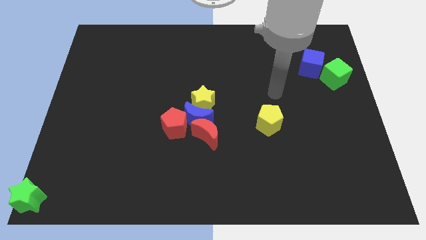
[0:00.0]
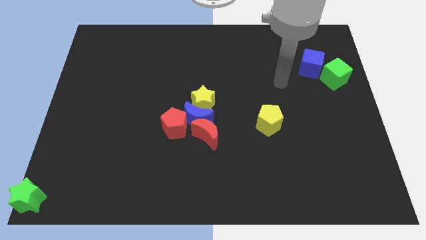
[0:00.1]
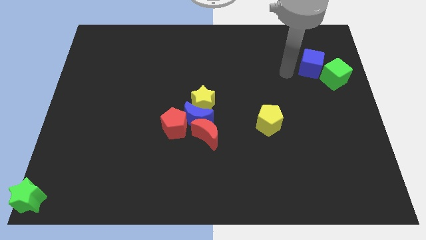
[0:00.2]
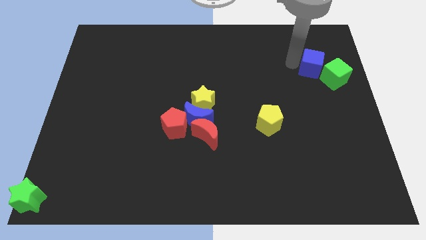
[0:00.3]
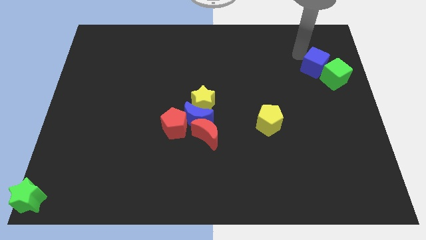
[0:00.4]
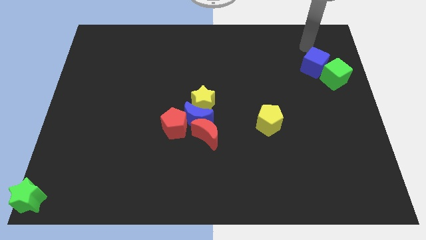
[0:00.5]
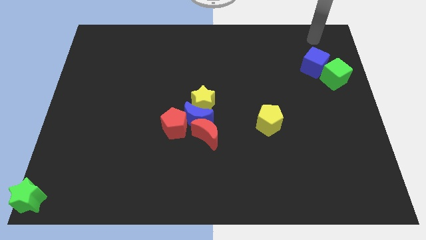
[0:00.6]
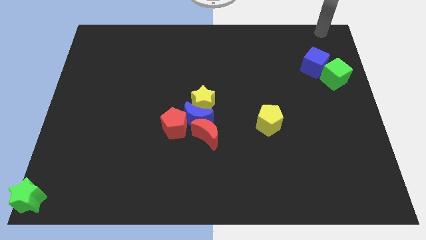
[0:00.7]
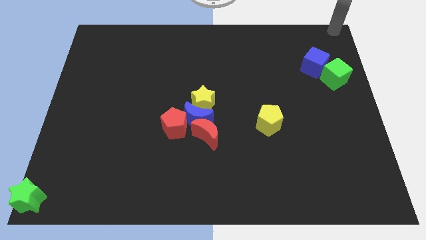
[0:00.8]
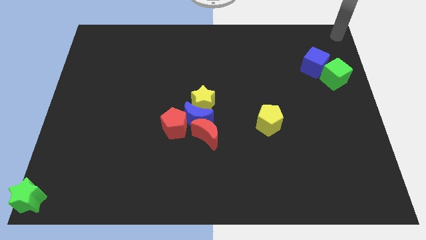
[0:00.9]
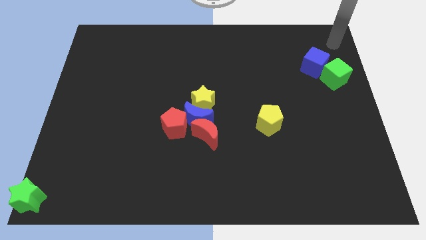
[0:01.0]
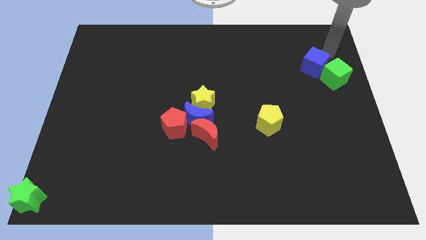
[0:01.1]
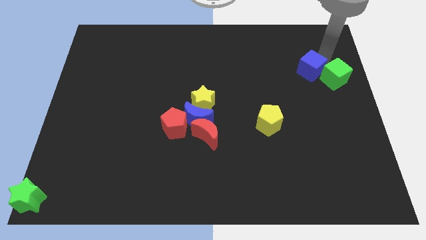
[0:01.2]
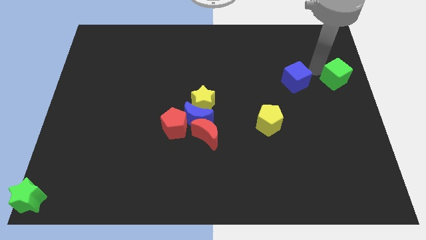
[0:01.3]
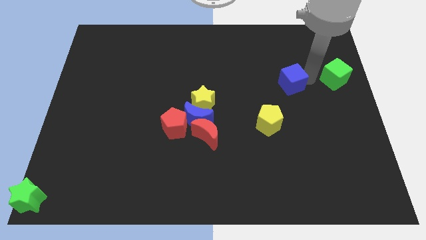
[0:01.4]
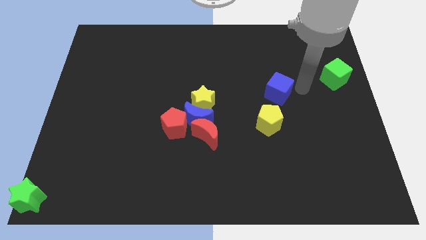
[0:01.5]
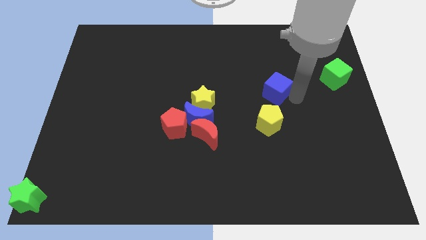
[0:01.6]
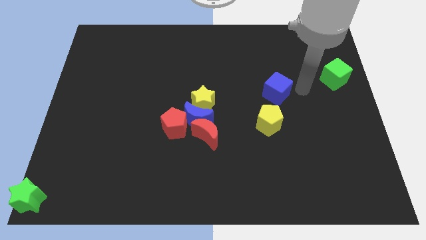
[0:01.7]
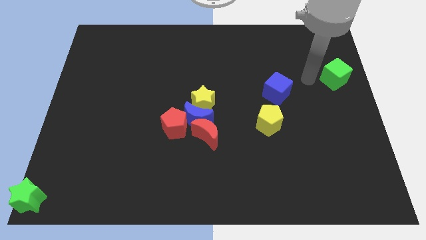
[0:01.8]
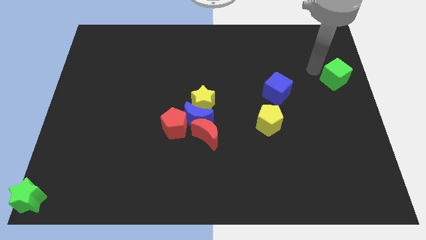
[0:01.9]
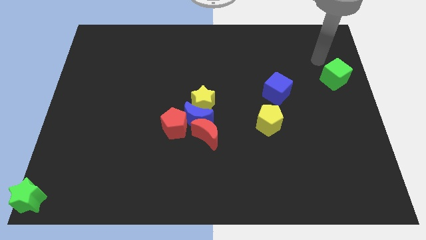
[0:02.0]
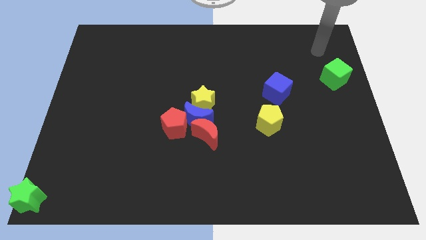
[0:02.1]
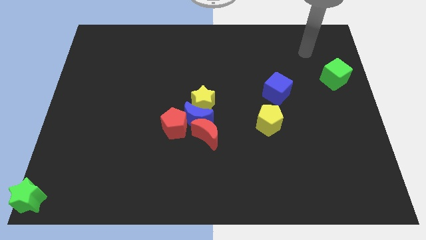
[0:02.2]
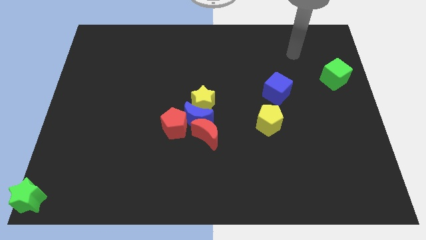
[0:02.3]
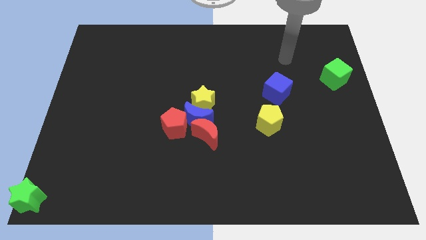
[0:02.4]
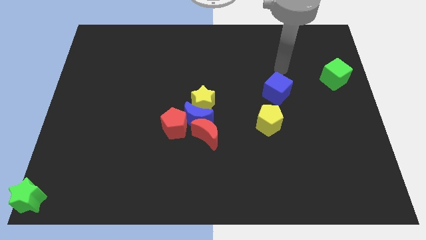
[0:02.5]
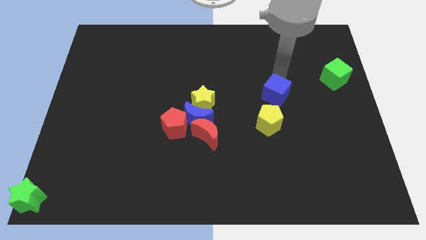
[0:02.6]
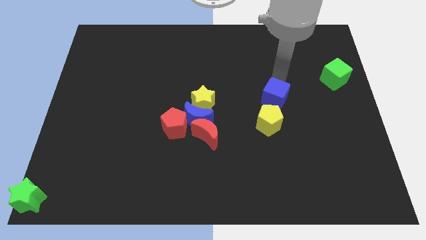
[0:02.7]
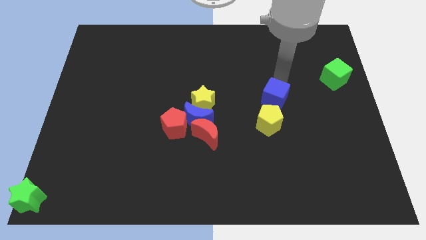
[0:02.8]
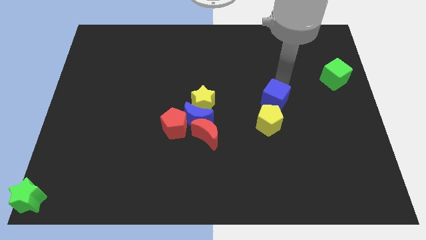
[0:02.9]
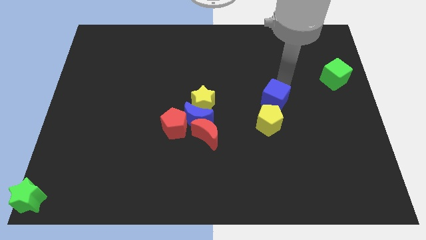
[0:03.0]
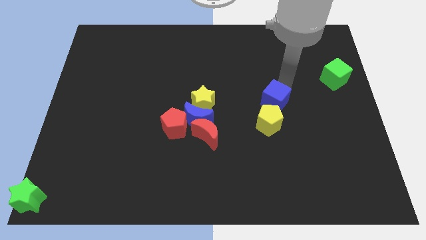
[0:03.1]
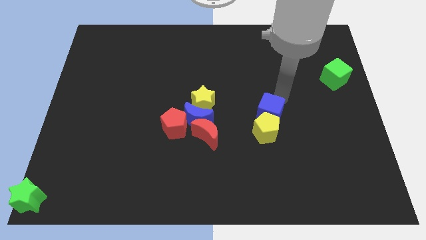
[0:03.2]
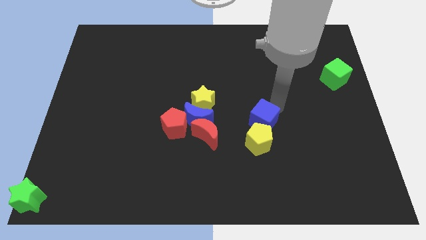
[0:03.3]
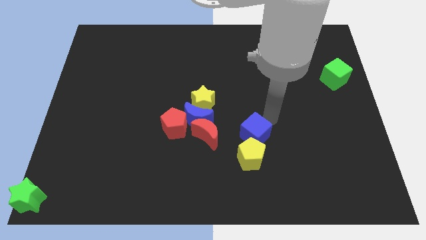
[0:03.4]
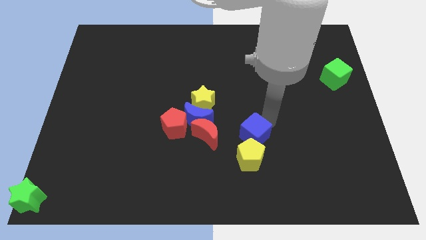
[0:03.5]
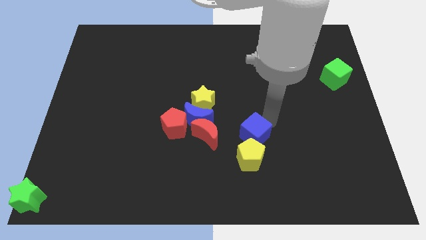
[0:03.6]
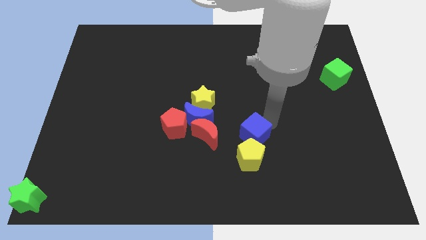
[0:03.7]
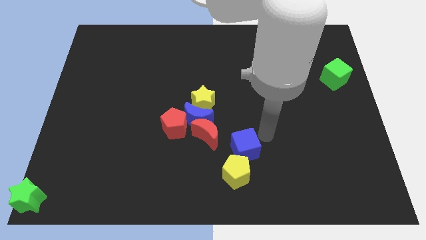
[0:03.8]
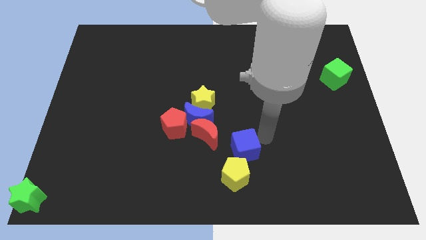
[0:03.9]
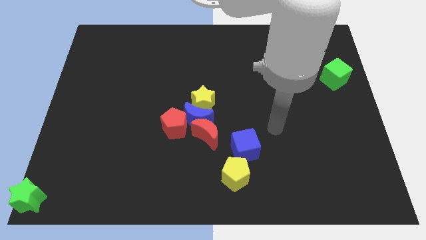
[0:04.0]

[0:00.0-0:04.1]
push the blue cube into yellow pentagon

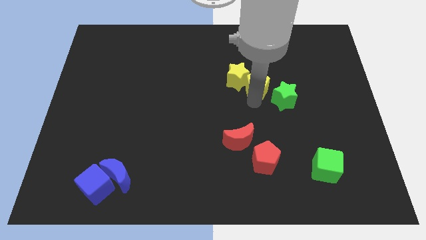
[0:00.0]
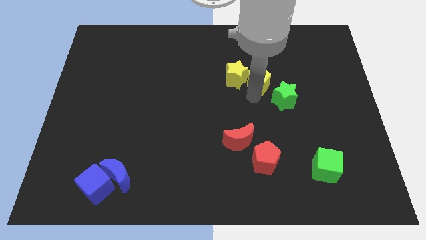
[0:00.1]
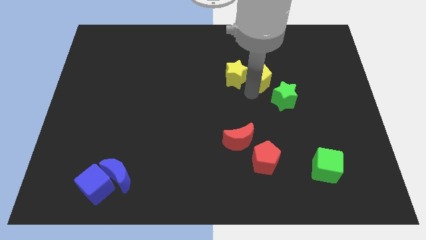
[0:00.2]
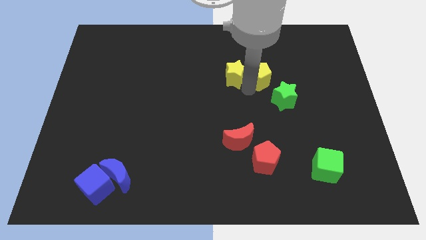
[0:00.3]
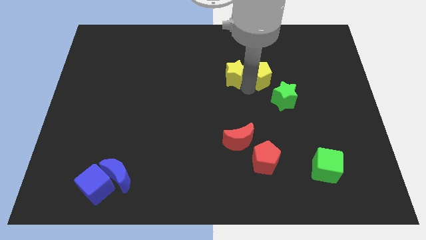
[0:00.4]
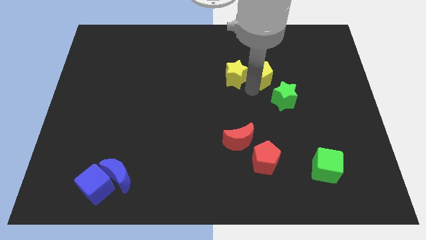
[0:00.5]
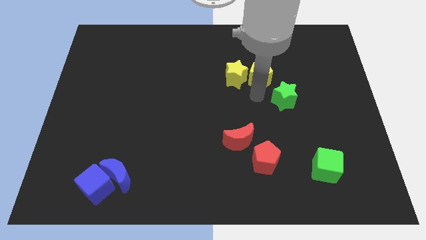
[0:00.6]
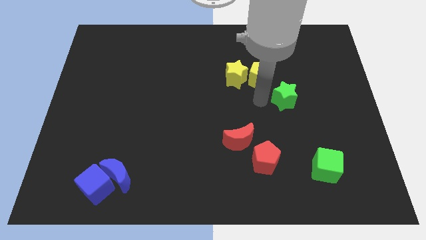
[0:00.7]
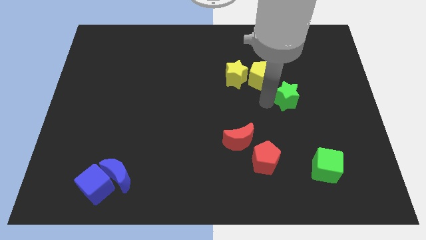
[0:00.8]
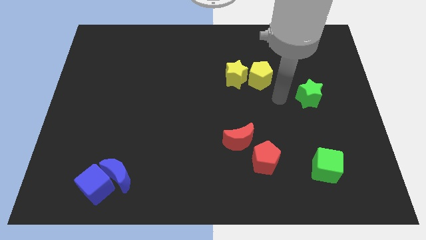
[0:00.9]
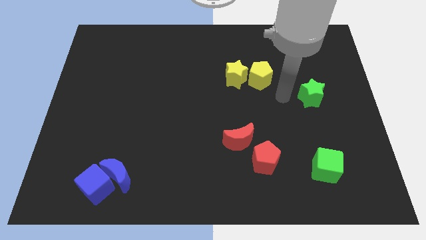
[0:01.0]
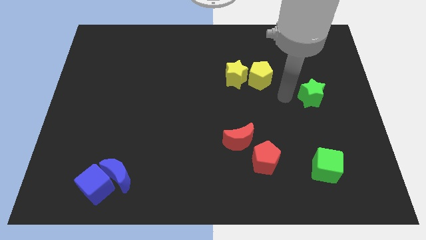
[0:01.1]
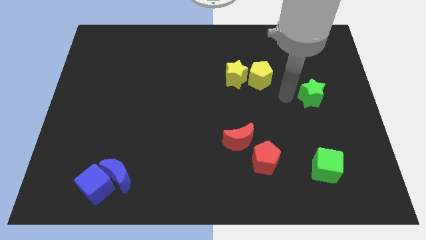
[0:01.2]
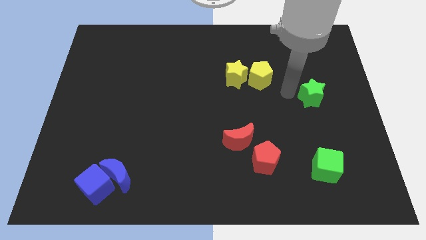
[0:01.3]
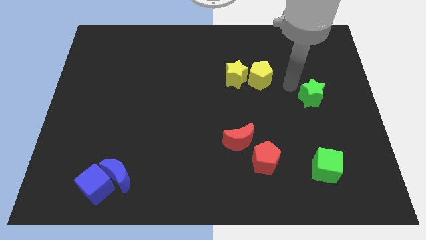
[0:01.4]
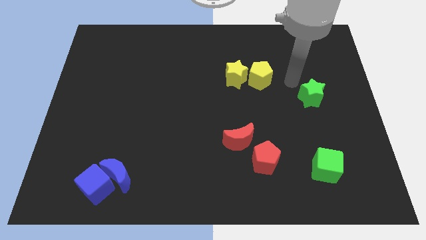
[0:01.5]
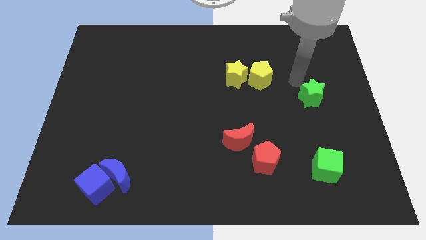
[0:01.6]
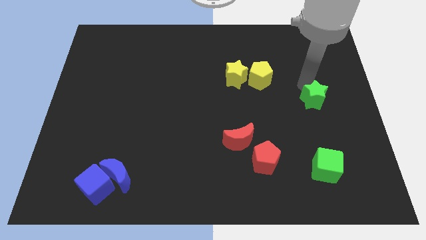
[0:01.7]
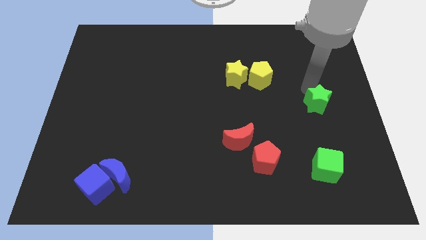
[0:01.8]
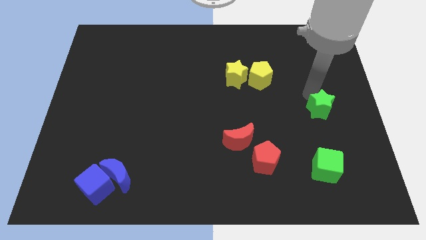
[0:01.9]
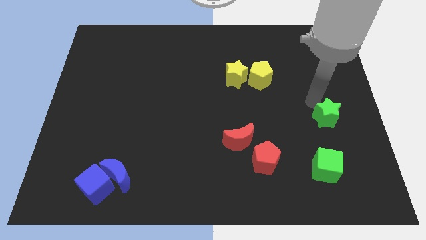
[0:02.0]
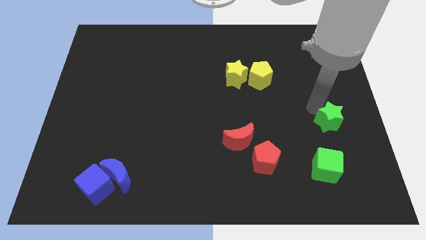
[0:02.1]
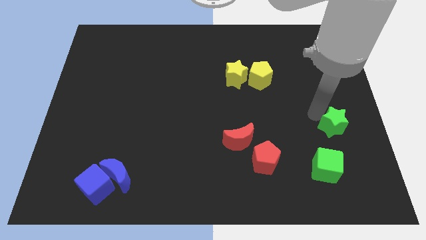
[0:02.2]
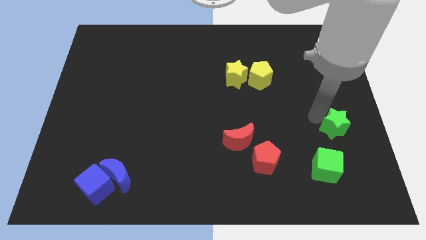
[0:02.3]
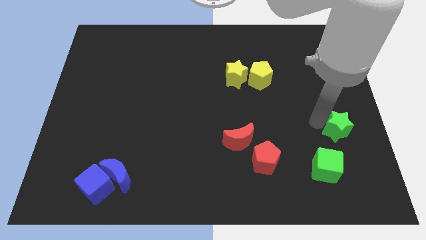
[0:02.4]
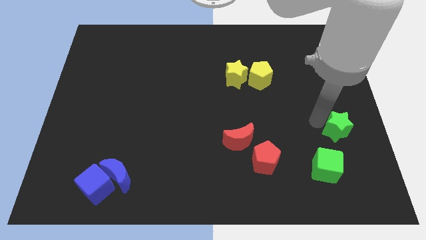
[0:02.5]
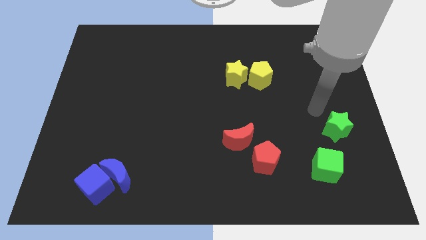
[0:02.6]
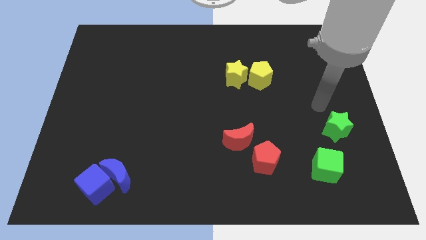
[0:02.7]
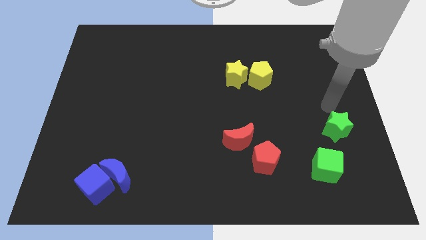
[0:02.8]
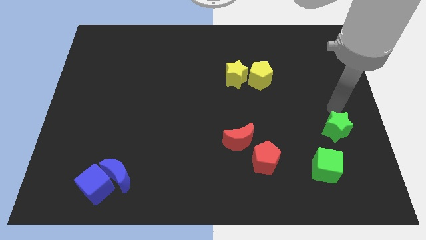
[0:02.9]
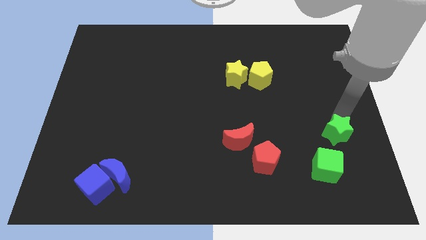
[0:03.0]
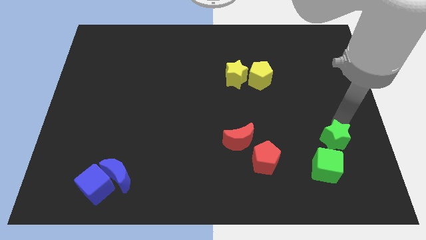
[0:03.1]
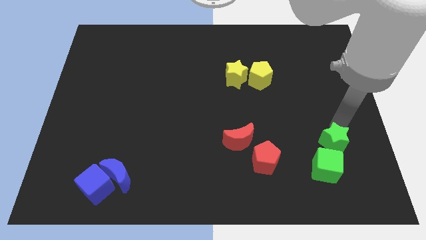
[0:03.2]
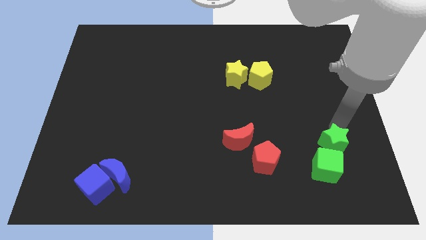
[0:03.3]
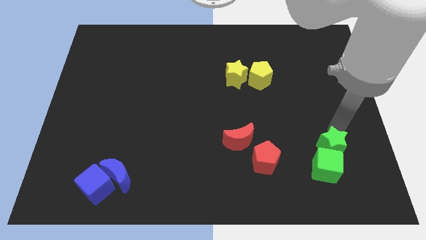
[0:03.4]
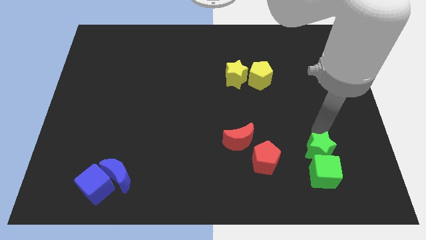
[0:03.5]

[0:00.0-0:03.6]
drag the green star into the top side of the green cube

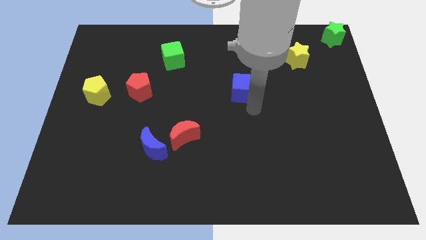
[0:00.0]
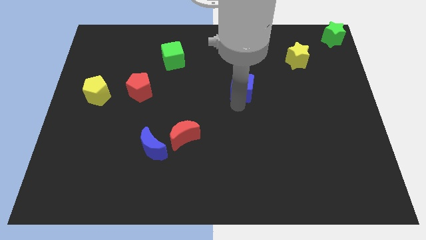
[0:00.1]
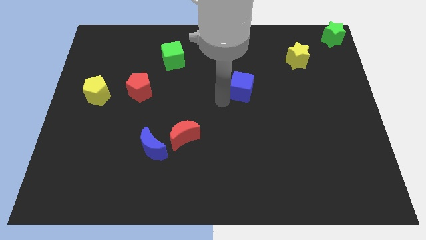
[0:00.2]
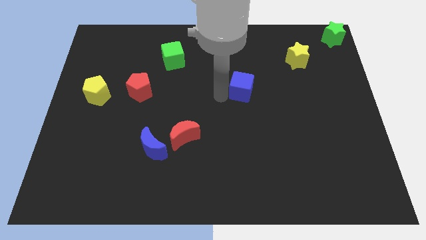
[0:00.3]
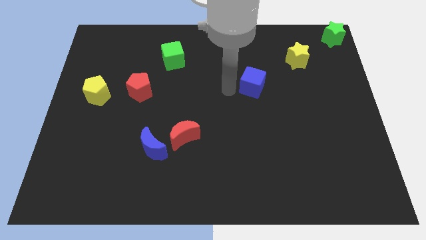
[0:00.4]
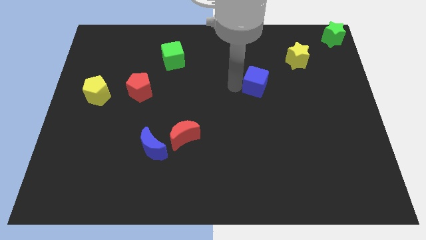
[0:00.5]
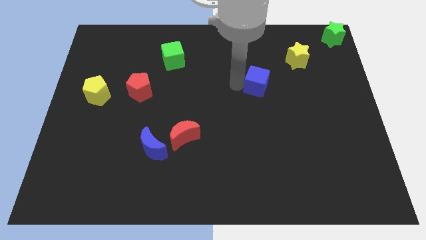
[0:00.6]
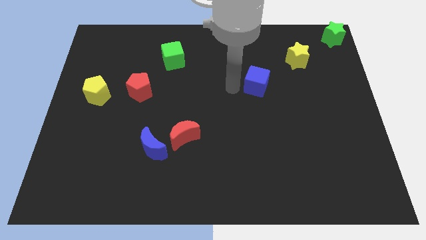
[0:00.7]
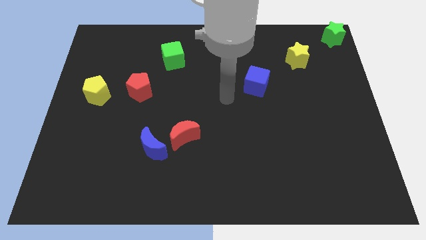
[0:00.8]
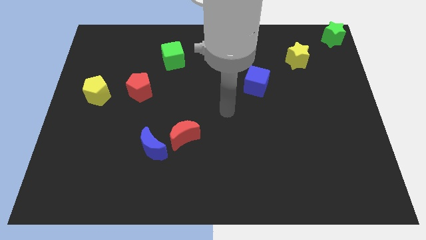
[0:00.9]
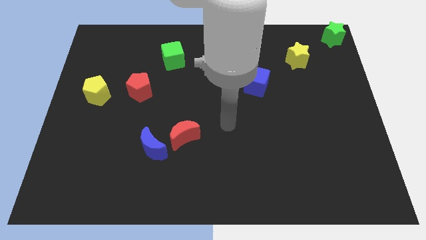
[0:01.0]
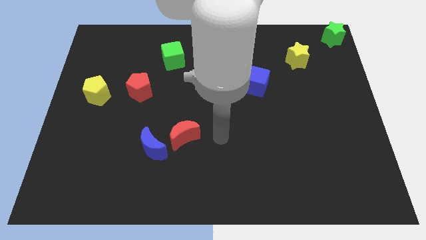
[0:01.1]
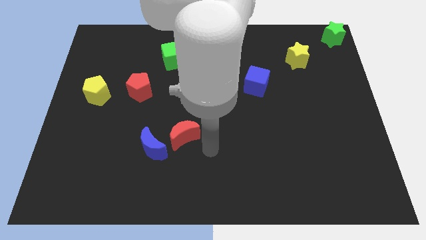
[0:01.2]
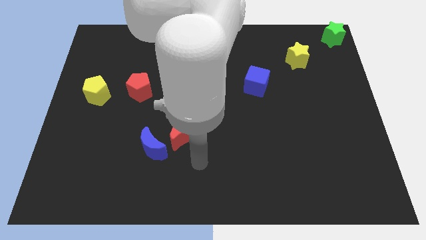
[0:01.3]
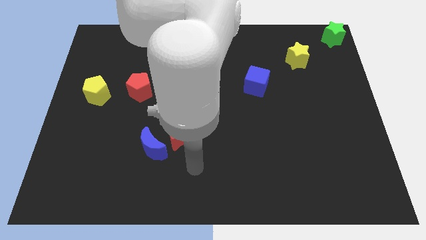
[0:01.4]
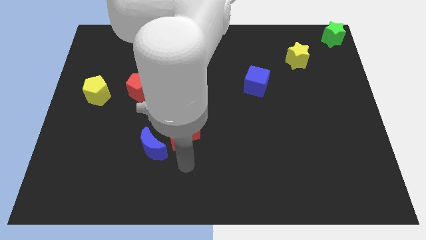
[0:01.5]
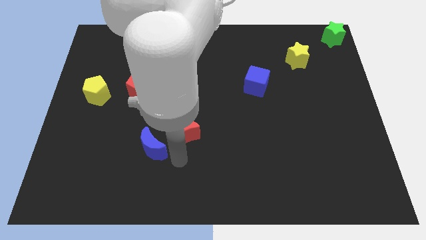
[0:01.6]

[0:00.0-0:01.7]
place the blue cube in between the red moon and the yellow star
